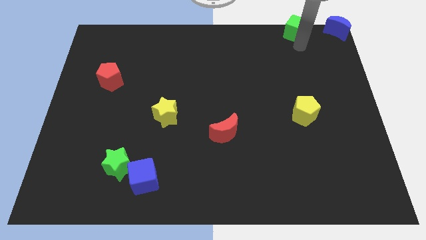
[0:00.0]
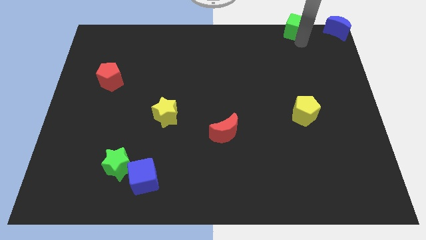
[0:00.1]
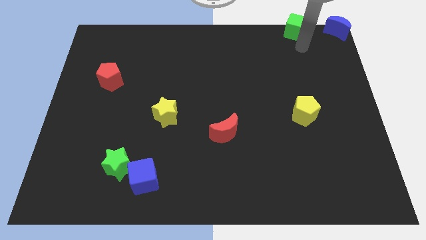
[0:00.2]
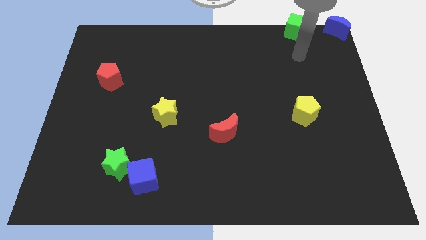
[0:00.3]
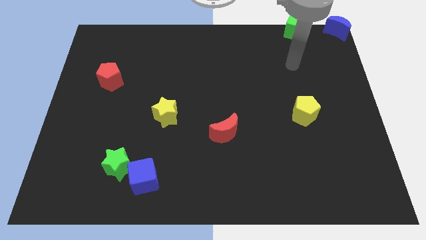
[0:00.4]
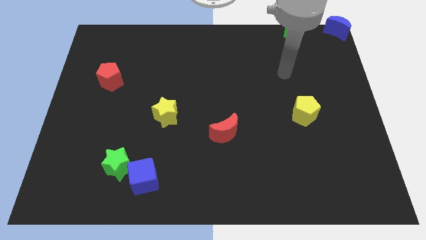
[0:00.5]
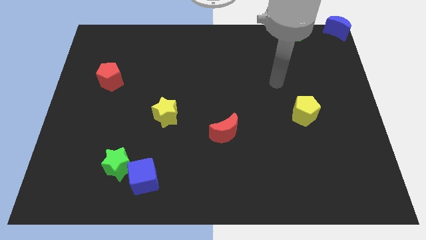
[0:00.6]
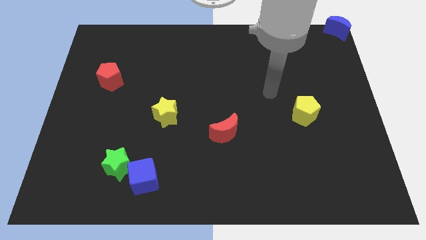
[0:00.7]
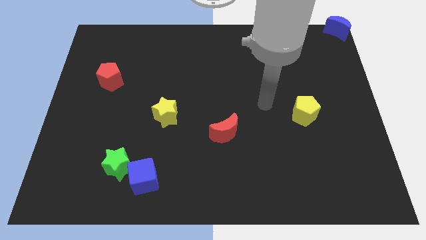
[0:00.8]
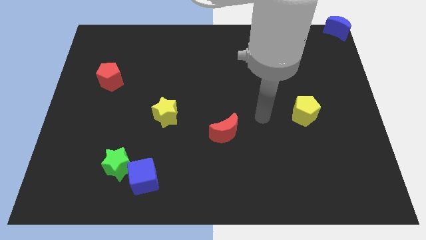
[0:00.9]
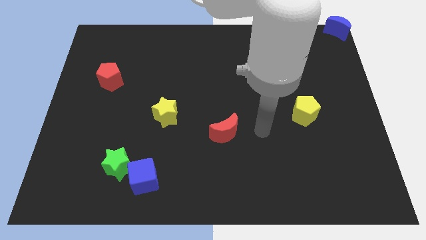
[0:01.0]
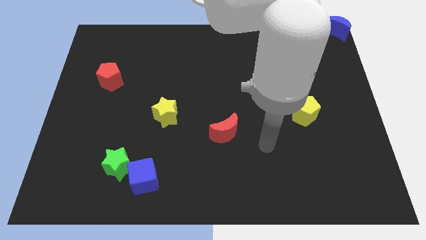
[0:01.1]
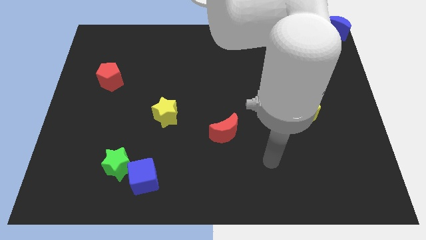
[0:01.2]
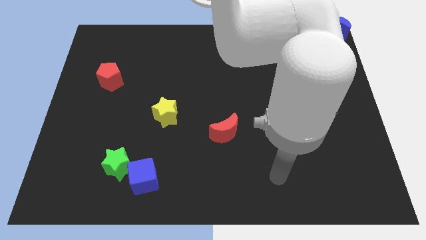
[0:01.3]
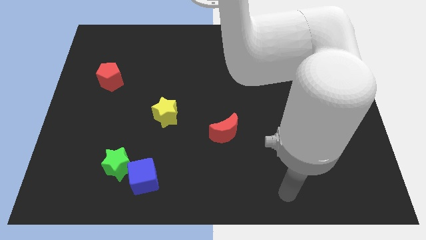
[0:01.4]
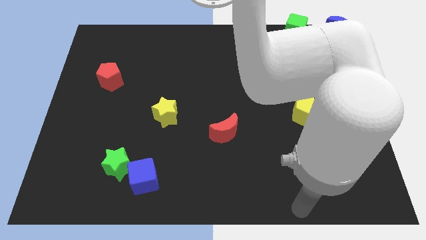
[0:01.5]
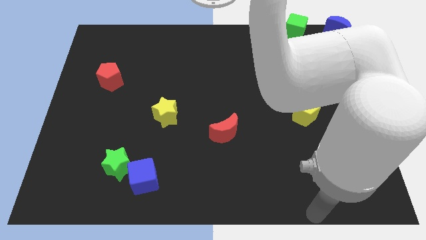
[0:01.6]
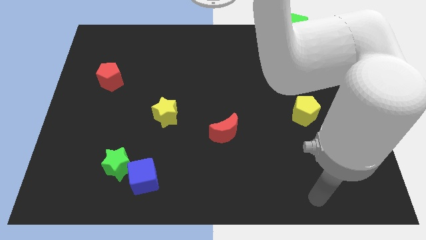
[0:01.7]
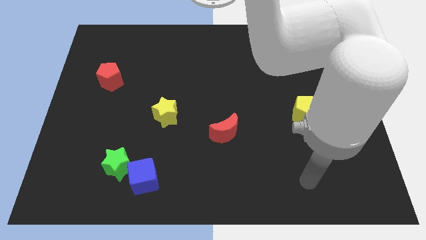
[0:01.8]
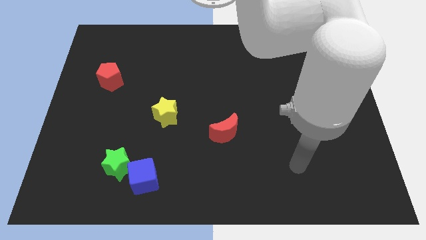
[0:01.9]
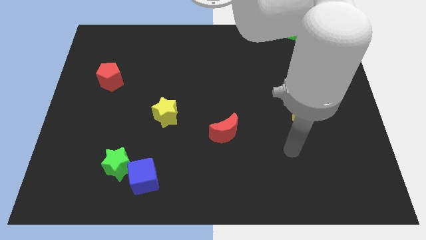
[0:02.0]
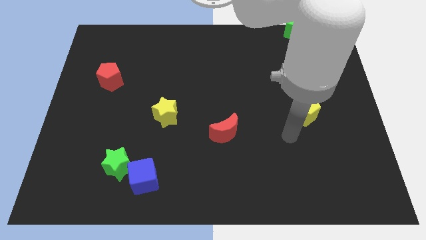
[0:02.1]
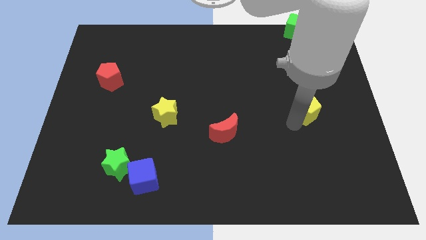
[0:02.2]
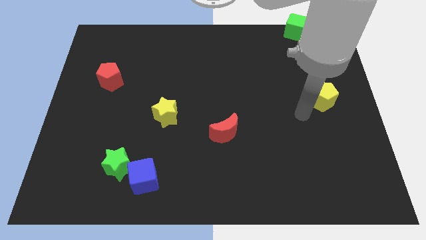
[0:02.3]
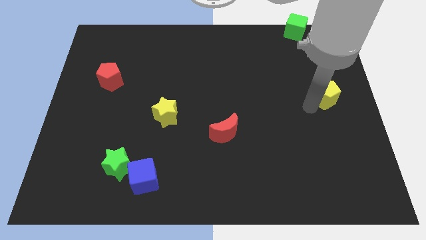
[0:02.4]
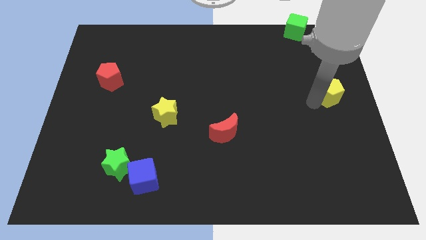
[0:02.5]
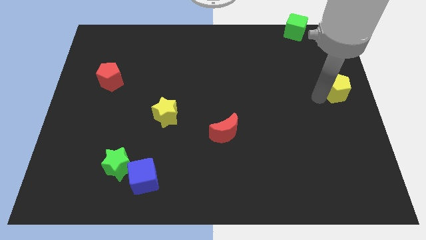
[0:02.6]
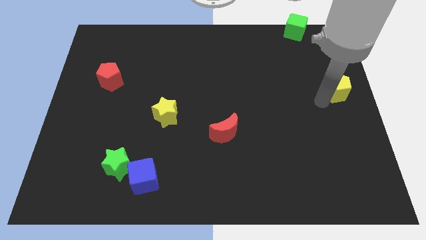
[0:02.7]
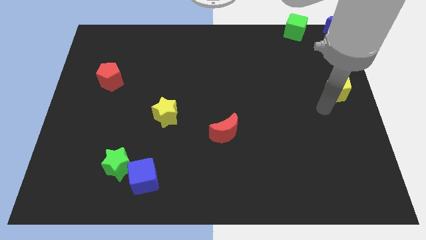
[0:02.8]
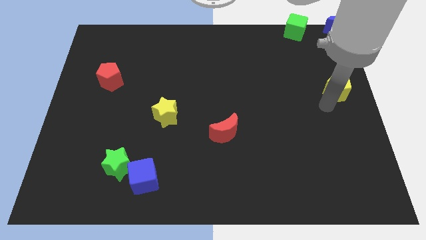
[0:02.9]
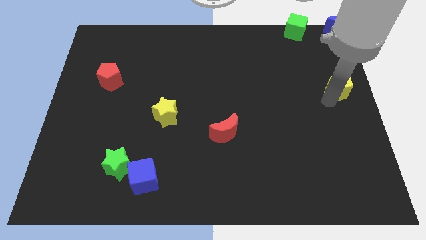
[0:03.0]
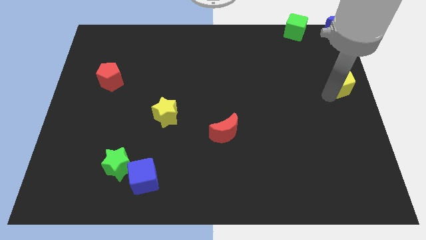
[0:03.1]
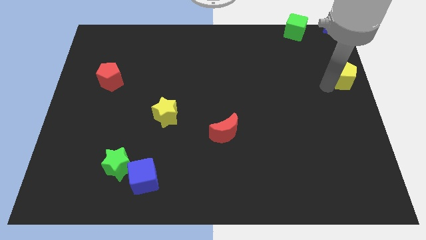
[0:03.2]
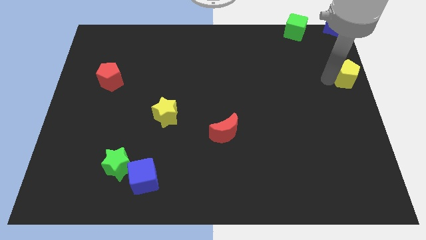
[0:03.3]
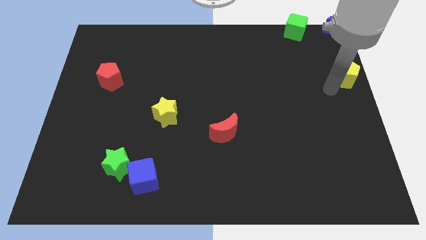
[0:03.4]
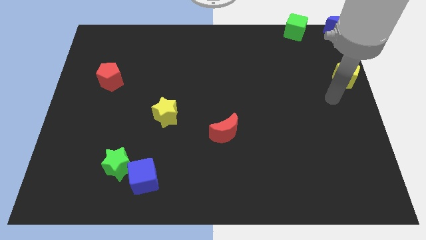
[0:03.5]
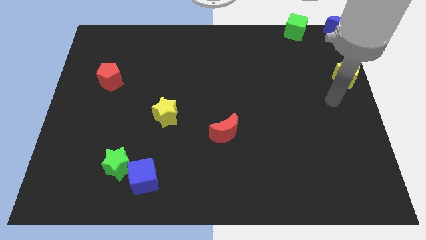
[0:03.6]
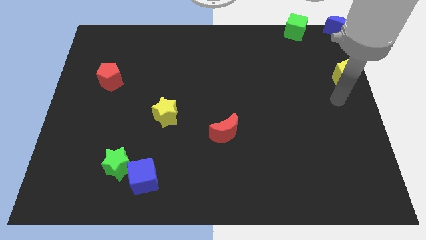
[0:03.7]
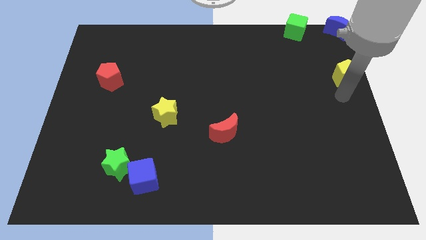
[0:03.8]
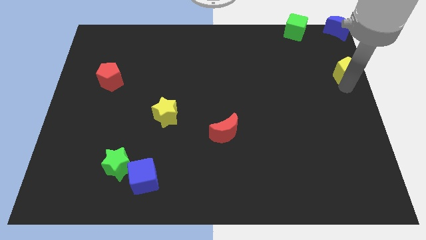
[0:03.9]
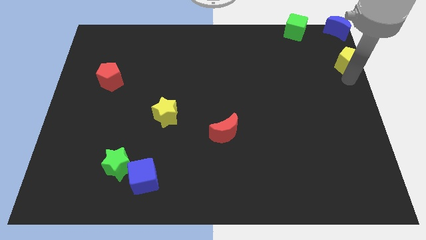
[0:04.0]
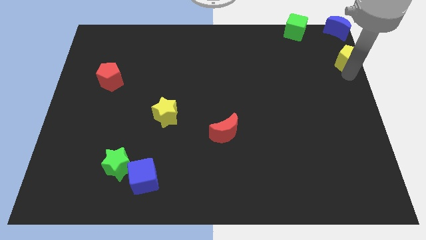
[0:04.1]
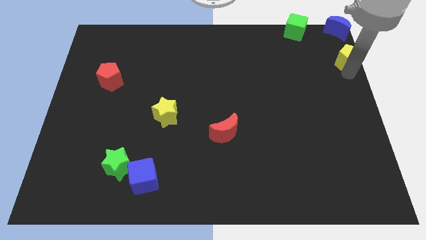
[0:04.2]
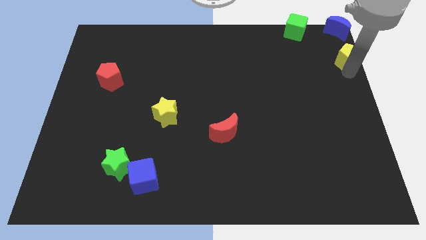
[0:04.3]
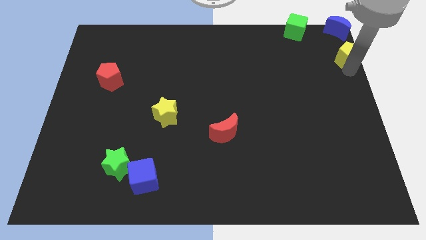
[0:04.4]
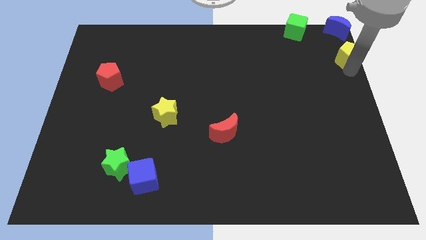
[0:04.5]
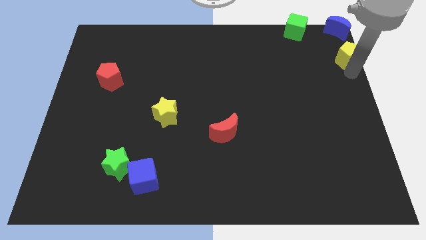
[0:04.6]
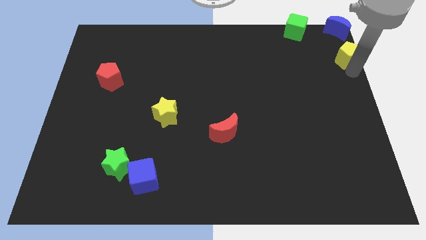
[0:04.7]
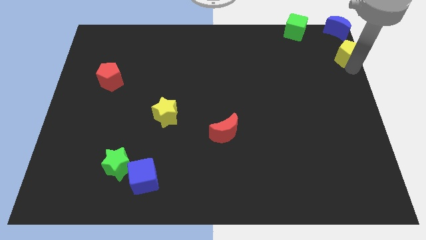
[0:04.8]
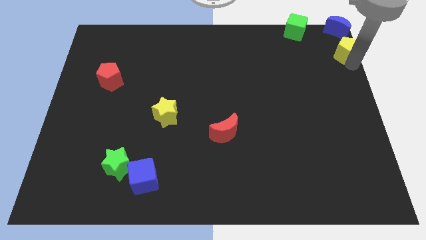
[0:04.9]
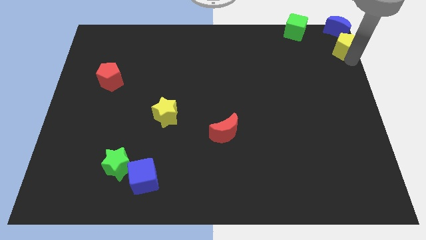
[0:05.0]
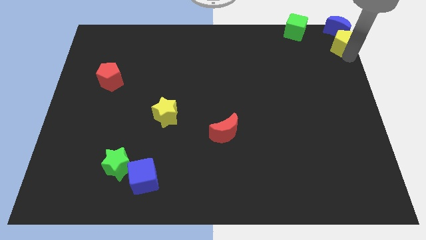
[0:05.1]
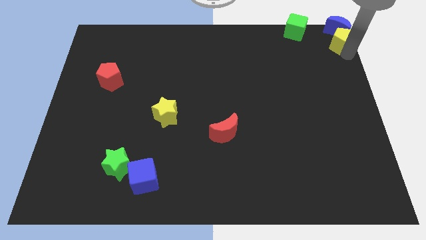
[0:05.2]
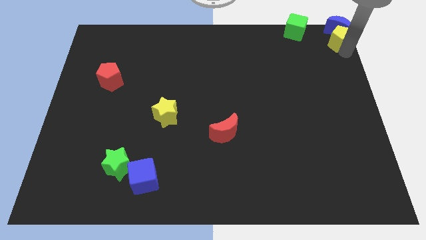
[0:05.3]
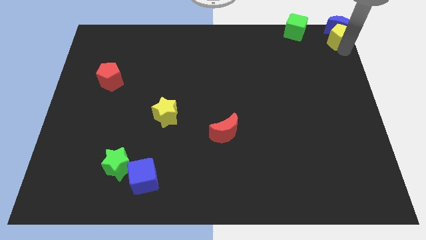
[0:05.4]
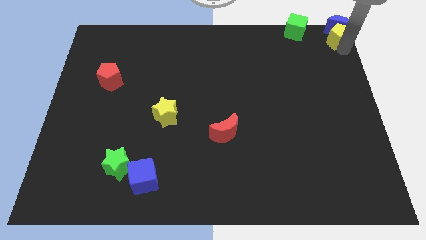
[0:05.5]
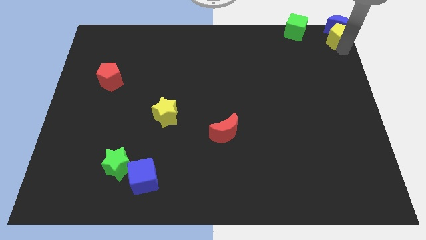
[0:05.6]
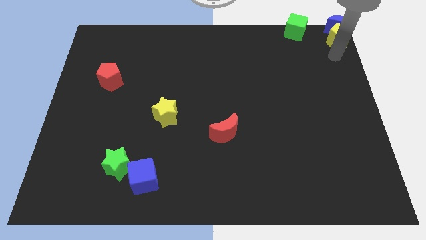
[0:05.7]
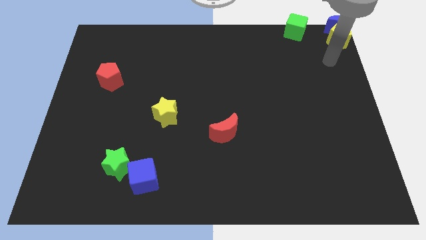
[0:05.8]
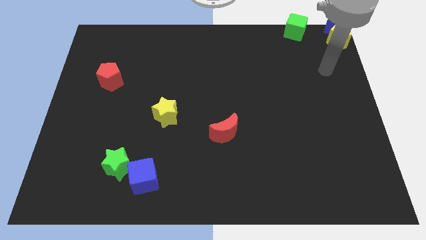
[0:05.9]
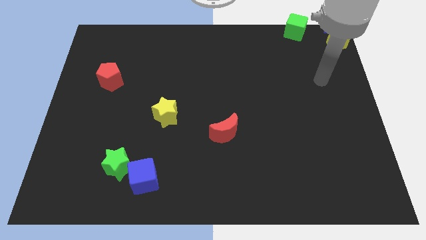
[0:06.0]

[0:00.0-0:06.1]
drag yellow pentagon close to blue crescent

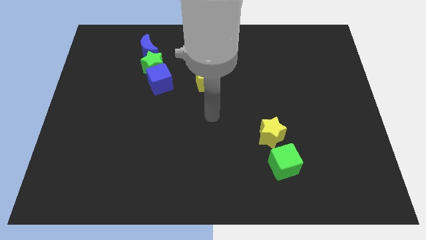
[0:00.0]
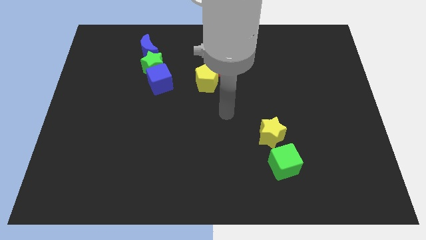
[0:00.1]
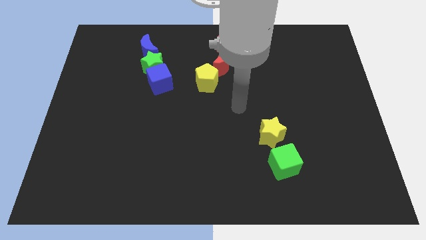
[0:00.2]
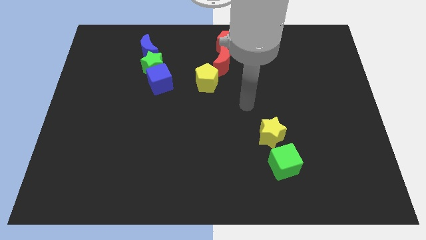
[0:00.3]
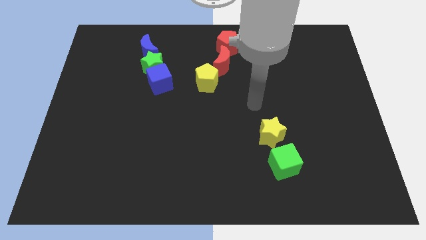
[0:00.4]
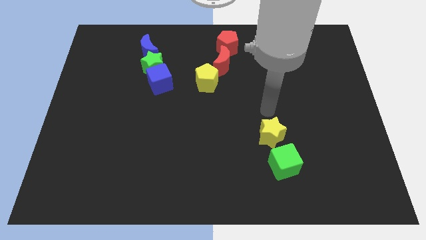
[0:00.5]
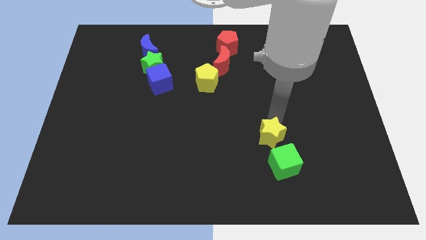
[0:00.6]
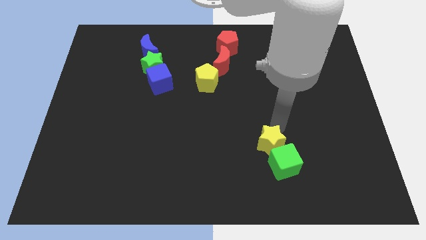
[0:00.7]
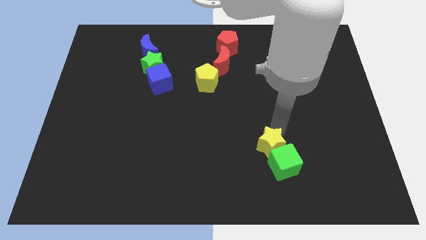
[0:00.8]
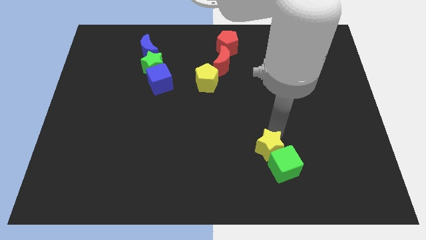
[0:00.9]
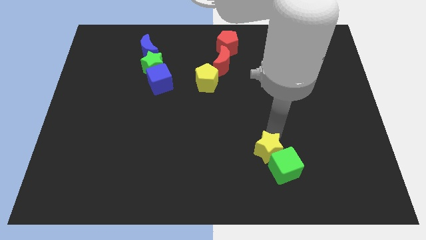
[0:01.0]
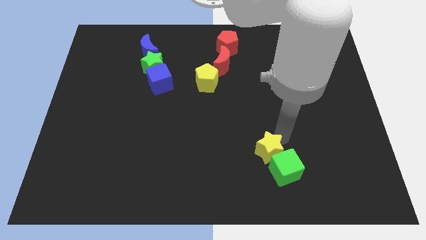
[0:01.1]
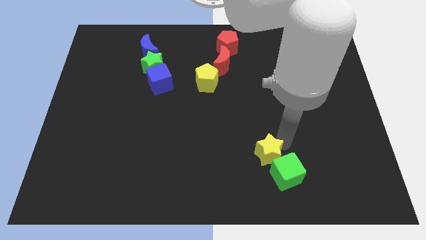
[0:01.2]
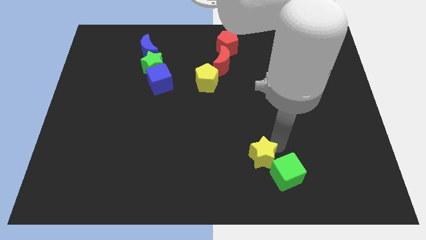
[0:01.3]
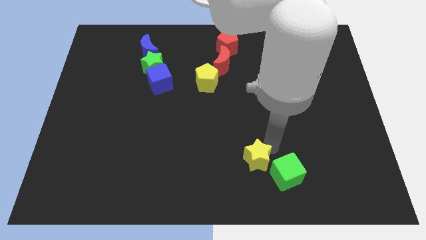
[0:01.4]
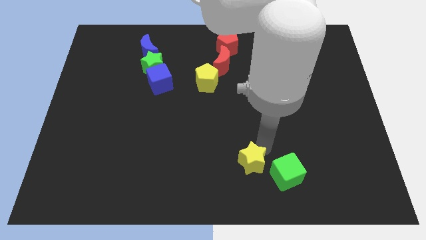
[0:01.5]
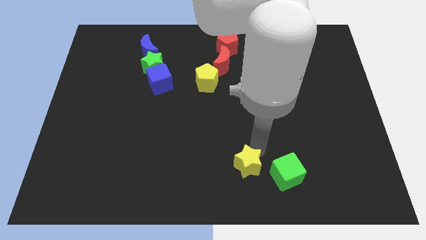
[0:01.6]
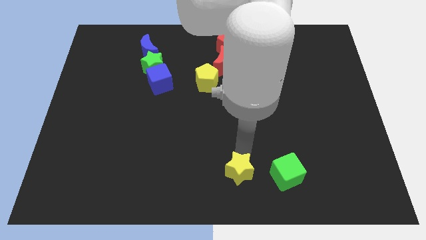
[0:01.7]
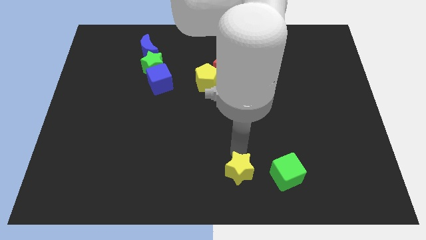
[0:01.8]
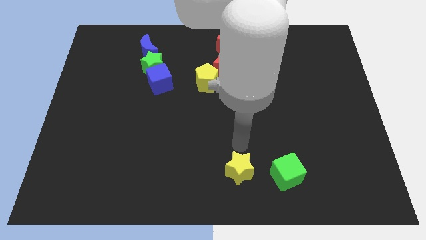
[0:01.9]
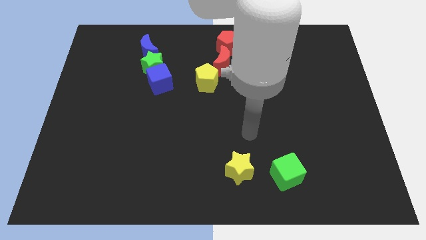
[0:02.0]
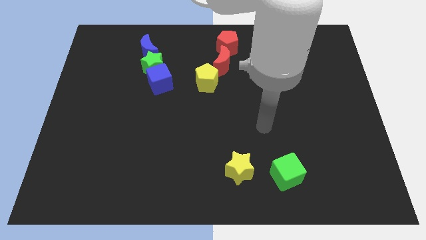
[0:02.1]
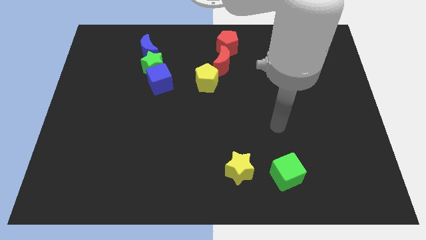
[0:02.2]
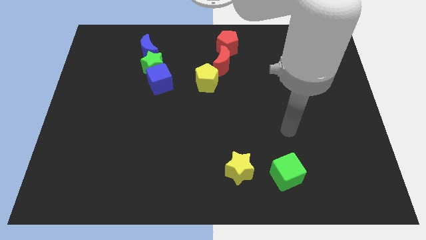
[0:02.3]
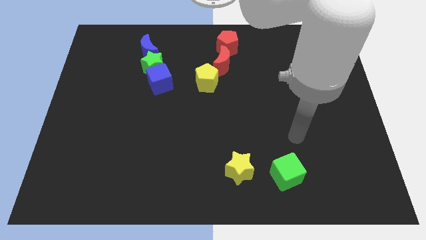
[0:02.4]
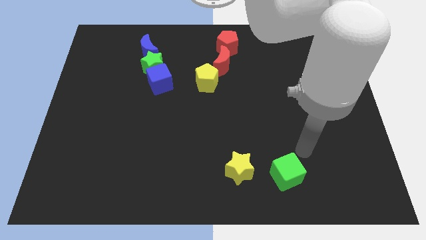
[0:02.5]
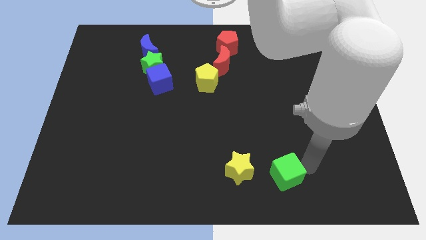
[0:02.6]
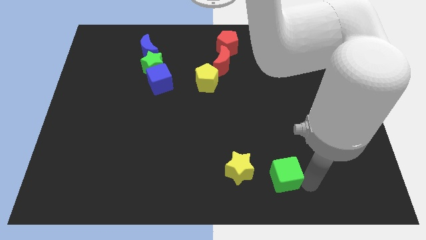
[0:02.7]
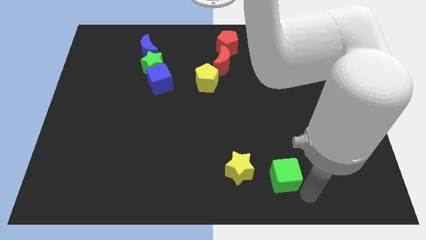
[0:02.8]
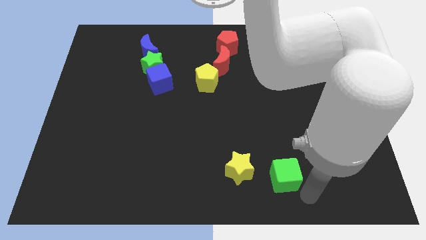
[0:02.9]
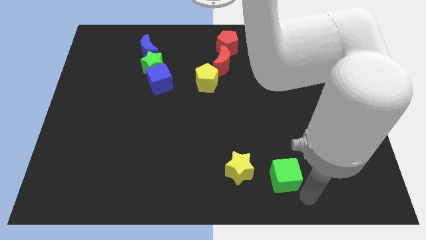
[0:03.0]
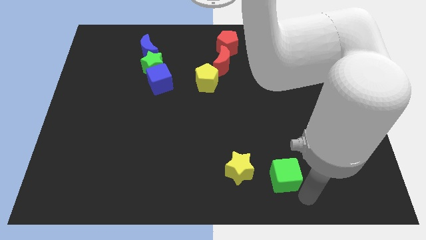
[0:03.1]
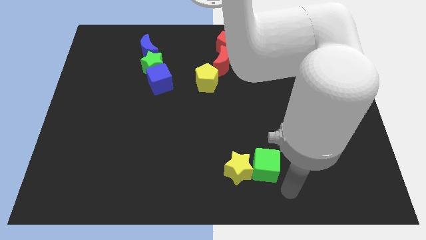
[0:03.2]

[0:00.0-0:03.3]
move the yellow star and green cube vertical to each other
